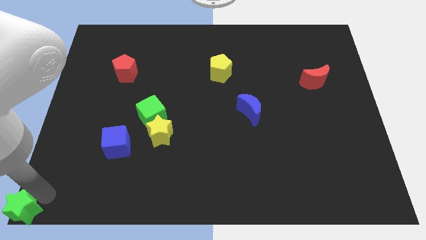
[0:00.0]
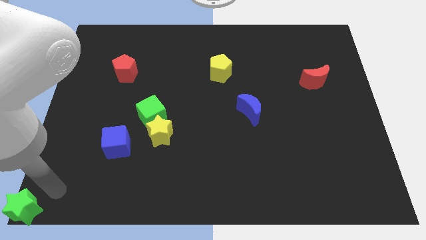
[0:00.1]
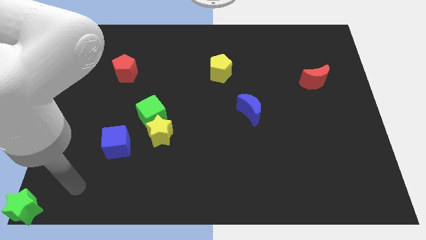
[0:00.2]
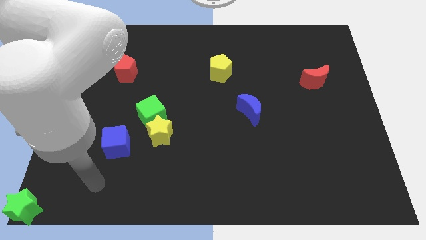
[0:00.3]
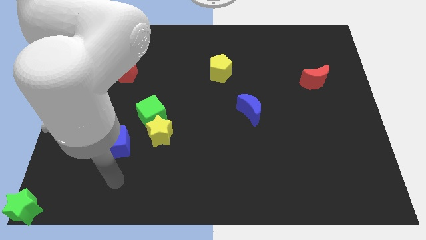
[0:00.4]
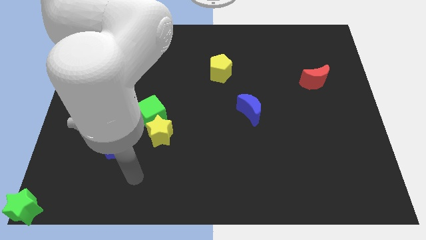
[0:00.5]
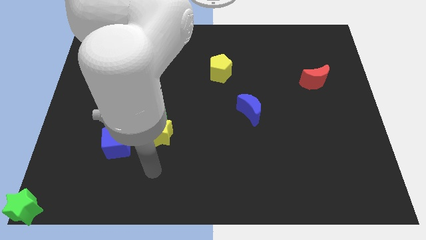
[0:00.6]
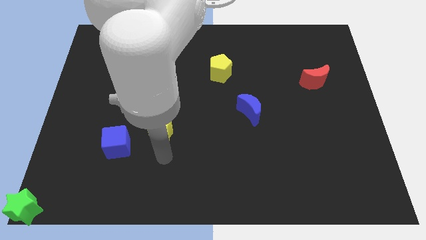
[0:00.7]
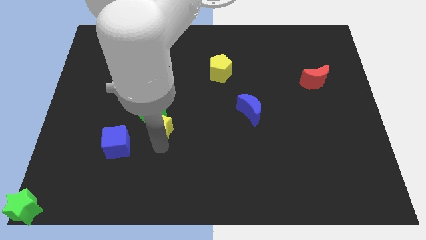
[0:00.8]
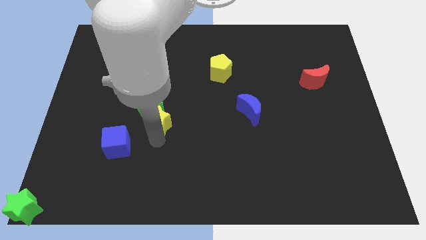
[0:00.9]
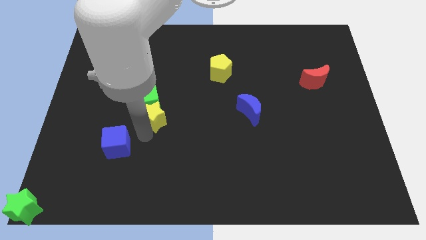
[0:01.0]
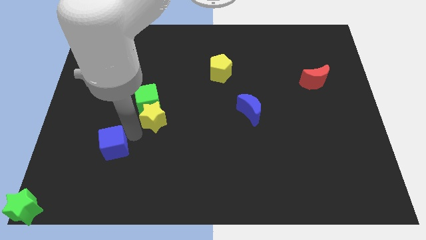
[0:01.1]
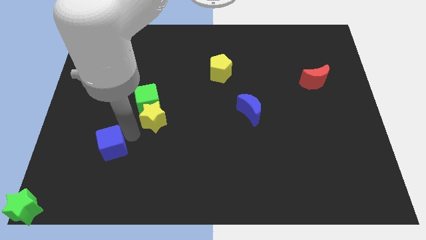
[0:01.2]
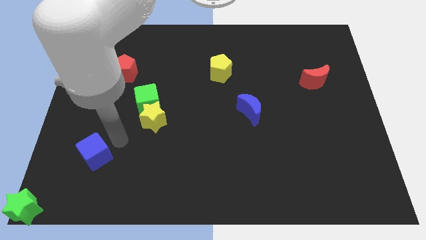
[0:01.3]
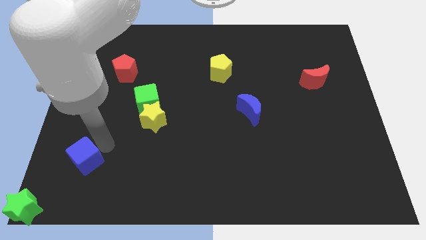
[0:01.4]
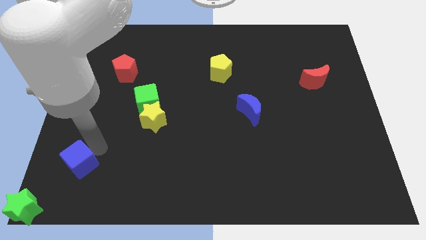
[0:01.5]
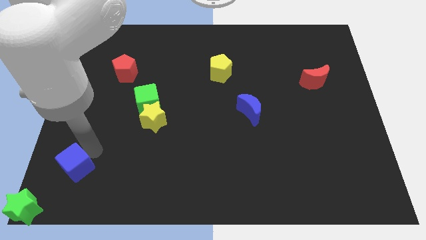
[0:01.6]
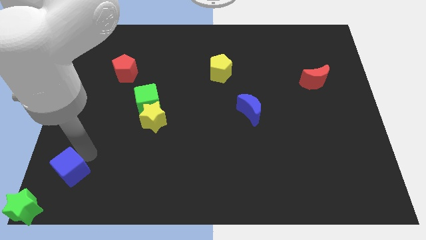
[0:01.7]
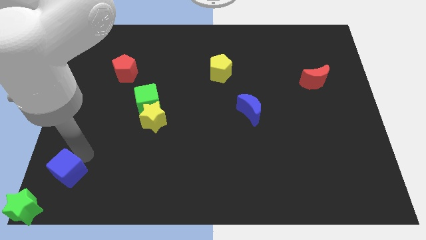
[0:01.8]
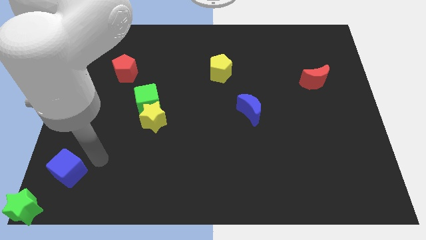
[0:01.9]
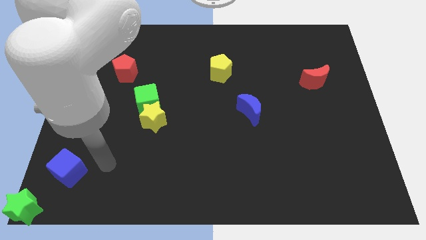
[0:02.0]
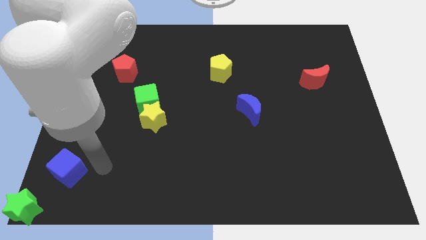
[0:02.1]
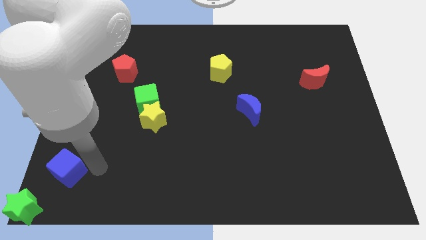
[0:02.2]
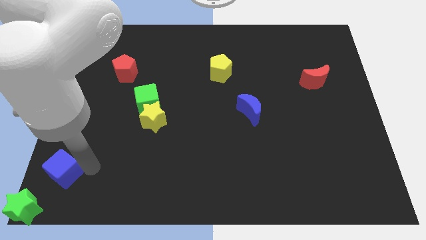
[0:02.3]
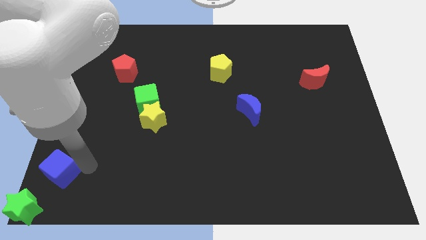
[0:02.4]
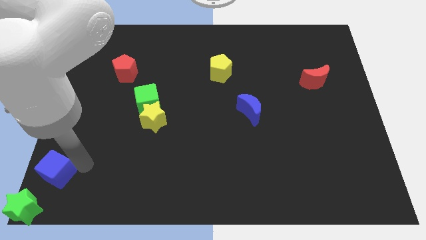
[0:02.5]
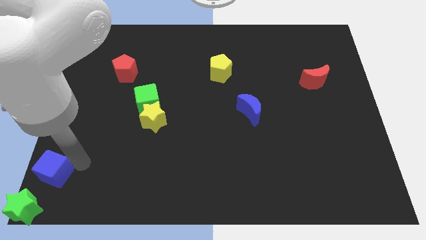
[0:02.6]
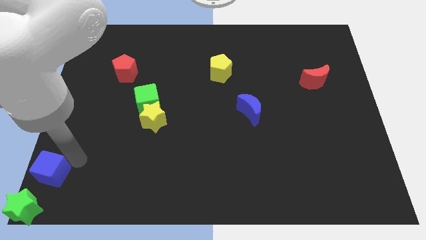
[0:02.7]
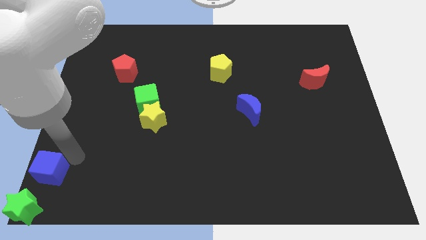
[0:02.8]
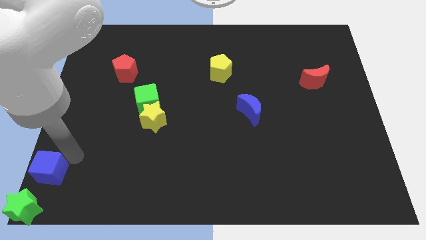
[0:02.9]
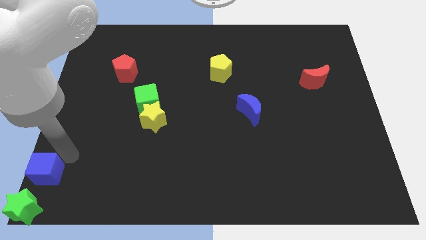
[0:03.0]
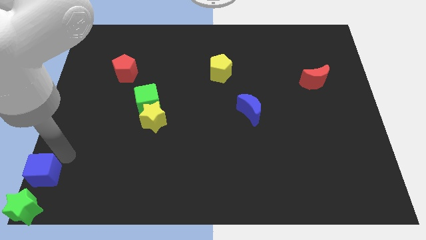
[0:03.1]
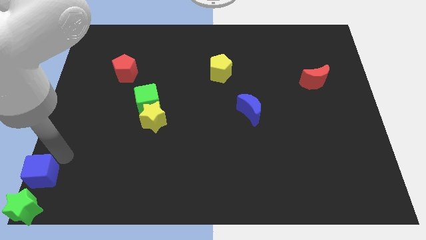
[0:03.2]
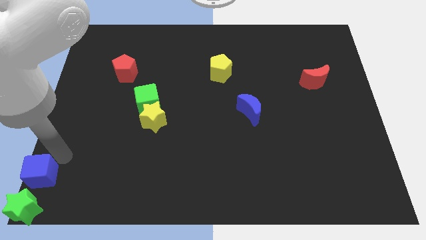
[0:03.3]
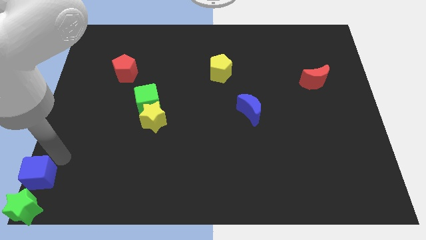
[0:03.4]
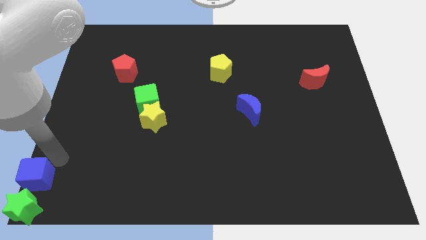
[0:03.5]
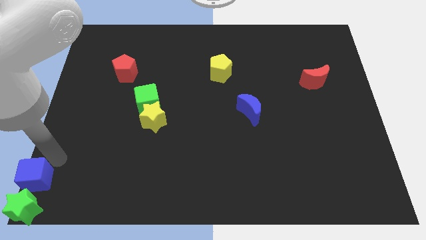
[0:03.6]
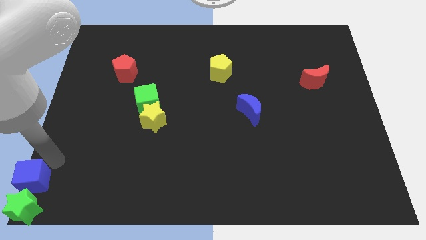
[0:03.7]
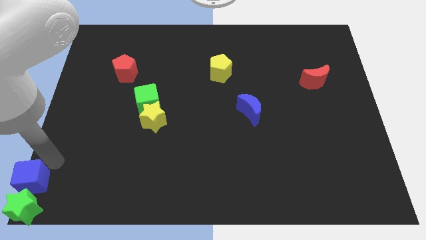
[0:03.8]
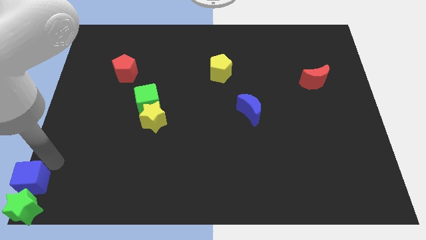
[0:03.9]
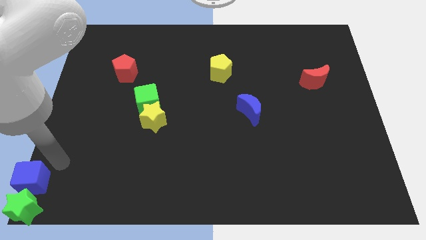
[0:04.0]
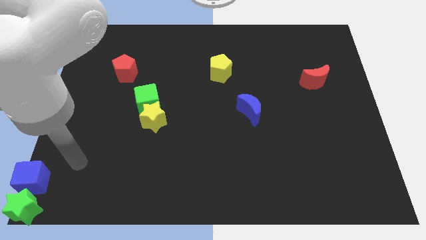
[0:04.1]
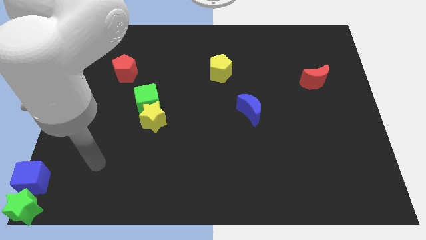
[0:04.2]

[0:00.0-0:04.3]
move blue cube to left bottom of the board

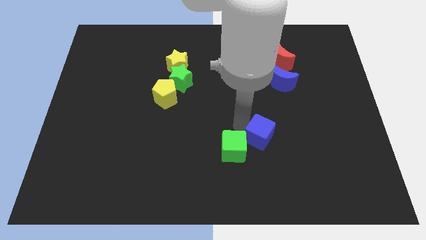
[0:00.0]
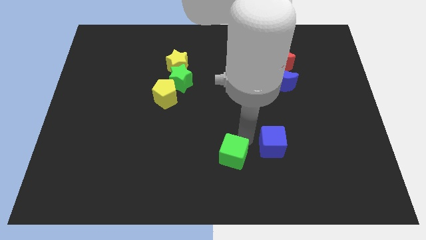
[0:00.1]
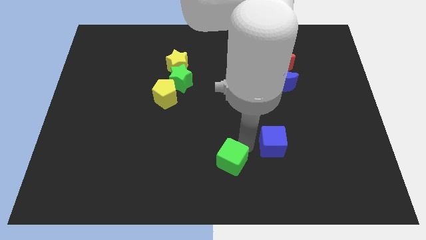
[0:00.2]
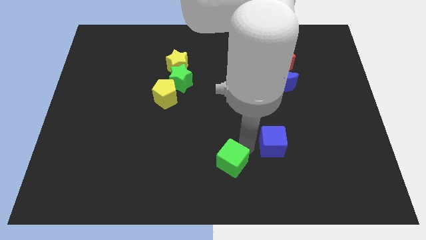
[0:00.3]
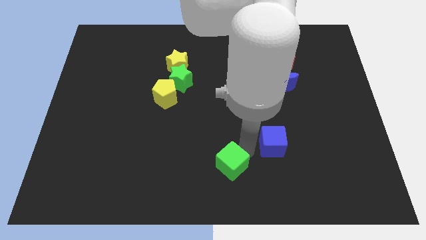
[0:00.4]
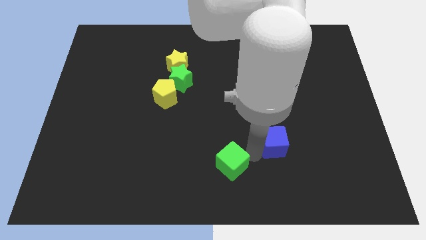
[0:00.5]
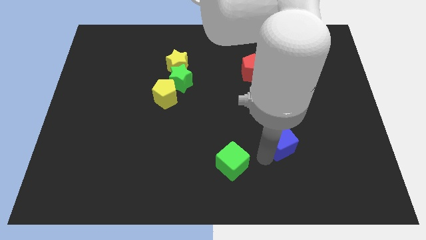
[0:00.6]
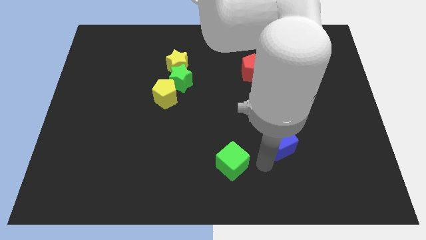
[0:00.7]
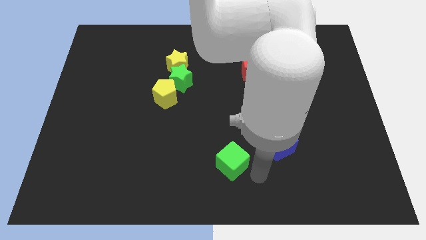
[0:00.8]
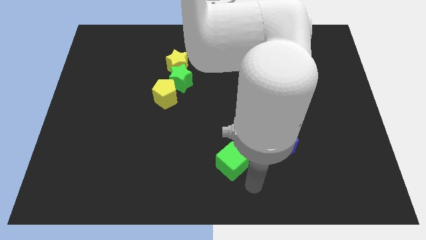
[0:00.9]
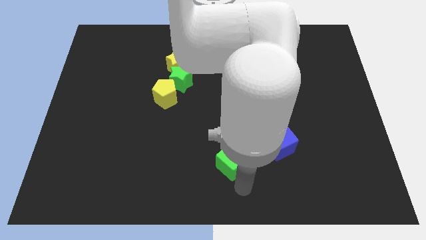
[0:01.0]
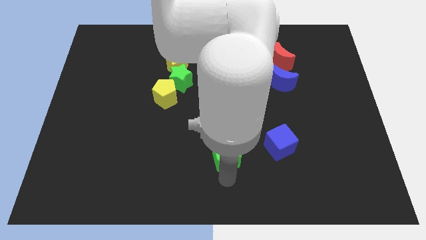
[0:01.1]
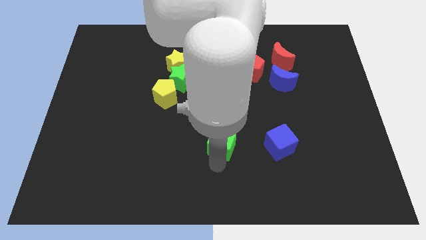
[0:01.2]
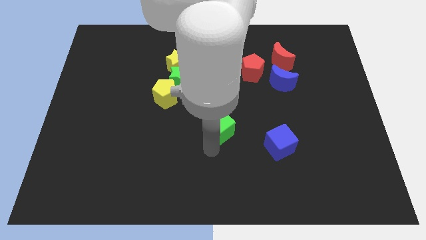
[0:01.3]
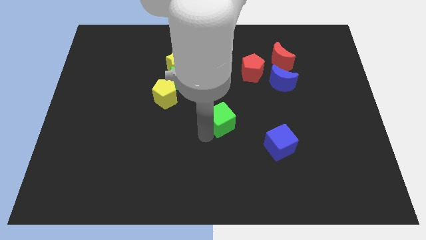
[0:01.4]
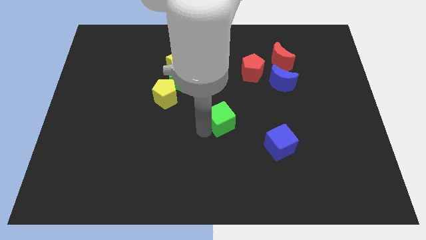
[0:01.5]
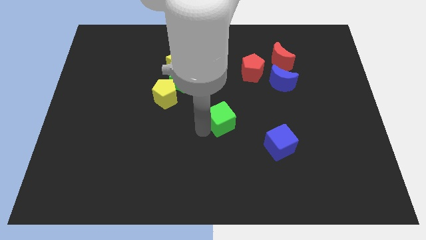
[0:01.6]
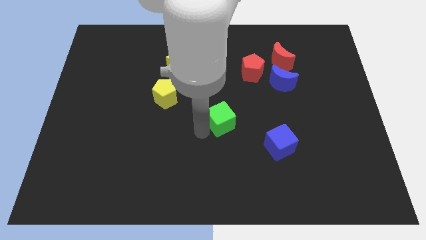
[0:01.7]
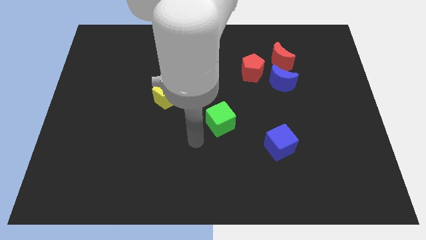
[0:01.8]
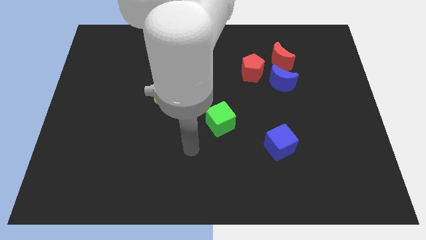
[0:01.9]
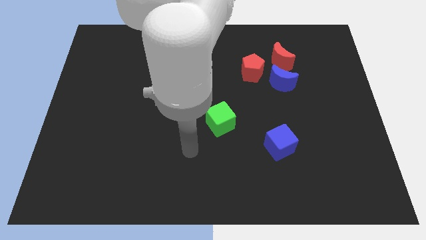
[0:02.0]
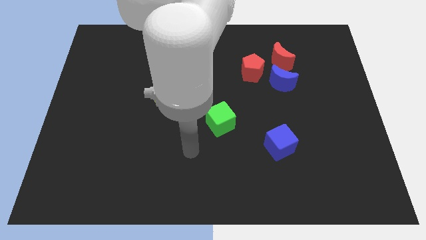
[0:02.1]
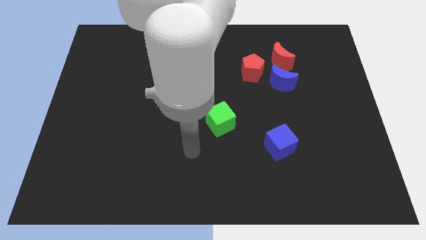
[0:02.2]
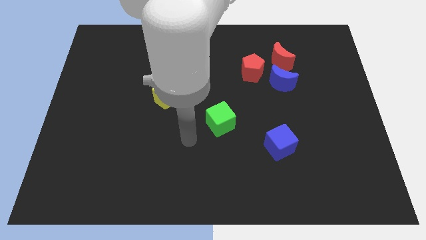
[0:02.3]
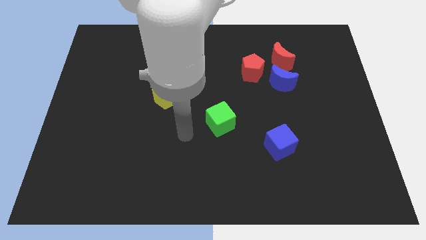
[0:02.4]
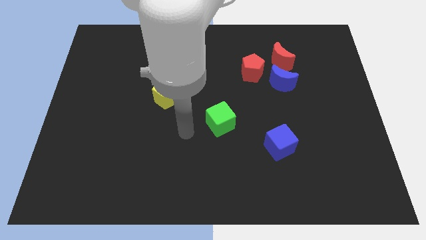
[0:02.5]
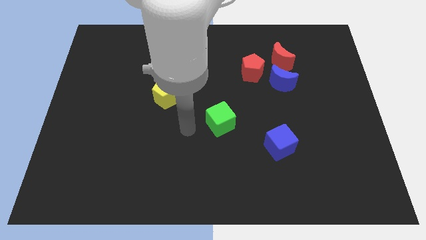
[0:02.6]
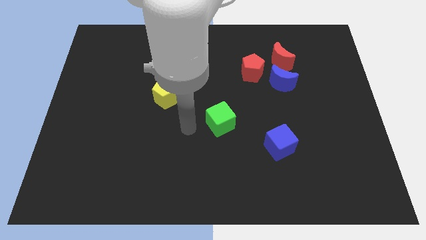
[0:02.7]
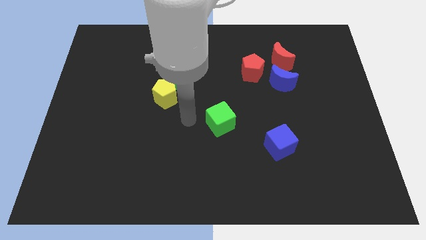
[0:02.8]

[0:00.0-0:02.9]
move the green cube to the center of the board

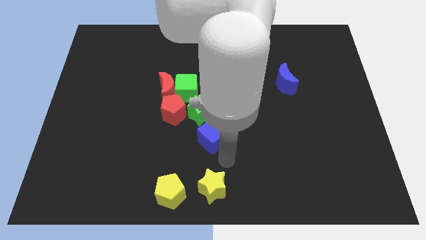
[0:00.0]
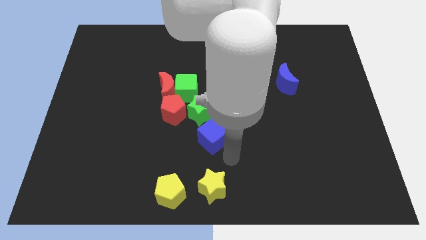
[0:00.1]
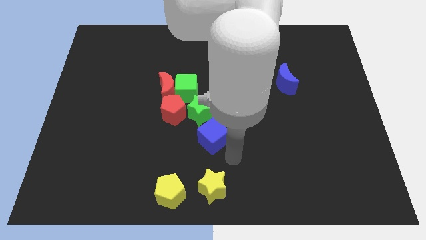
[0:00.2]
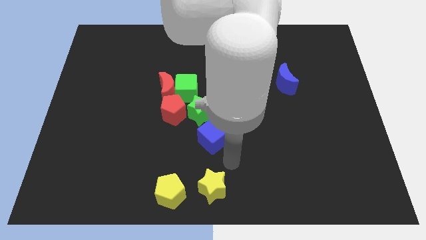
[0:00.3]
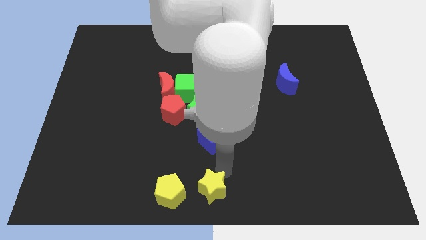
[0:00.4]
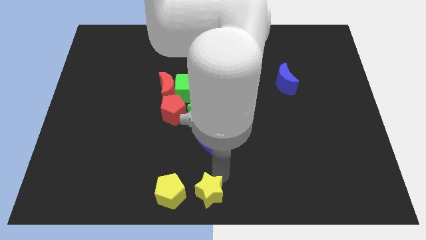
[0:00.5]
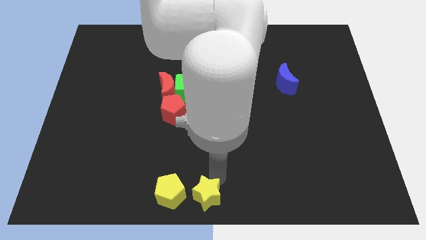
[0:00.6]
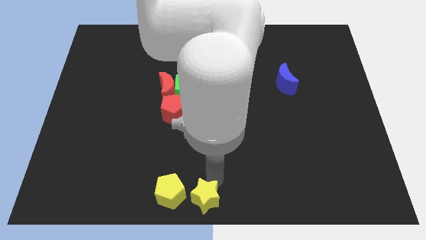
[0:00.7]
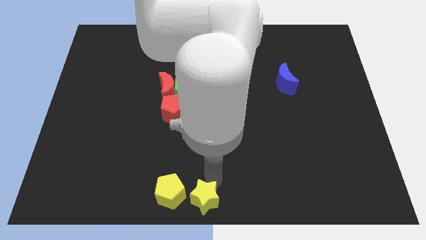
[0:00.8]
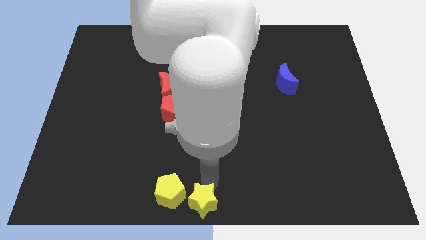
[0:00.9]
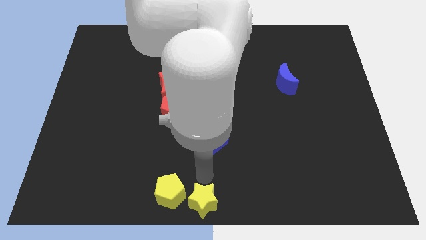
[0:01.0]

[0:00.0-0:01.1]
place the yellow star to the right side of yellow pentagon

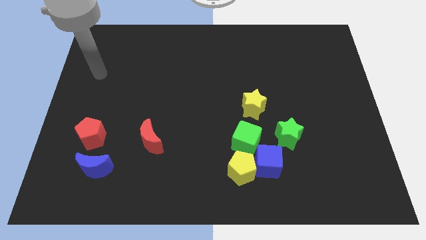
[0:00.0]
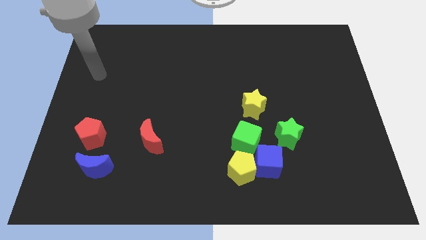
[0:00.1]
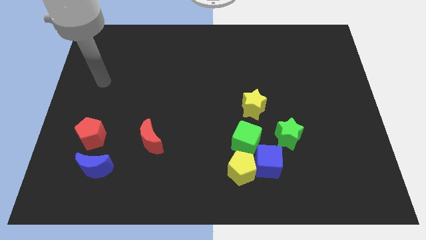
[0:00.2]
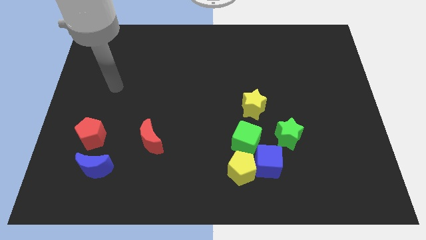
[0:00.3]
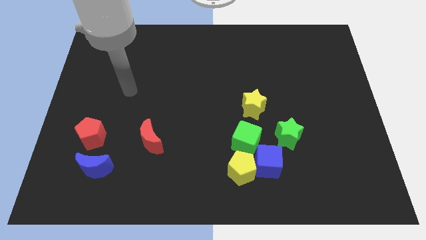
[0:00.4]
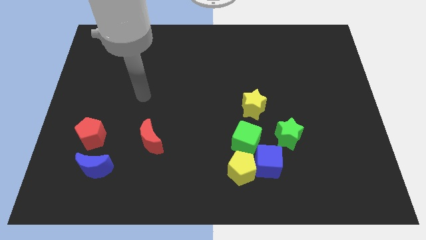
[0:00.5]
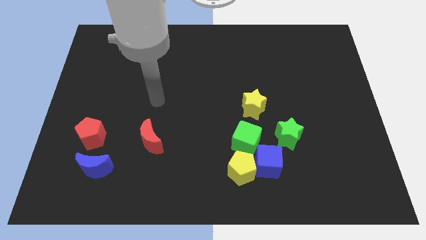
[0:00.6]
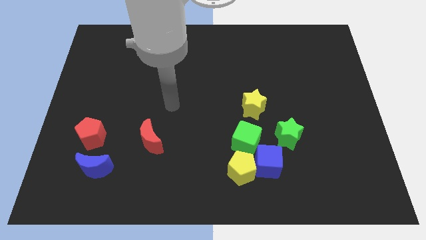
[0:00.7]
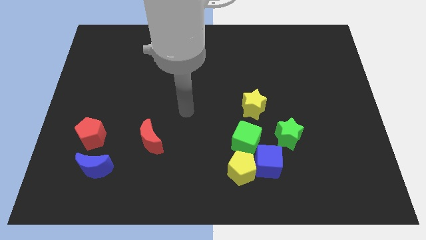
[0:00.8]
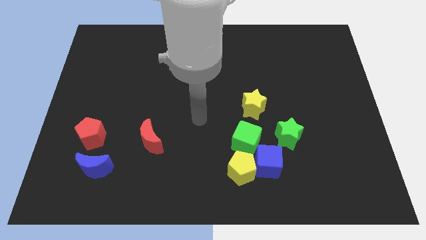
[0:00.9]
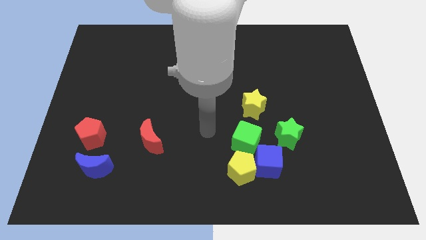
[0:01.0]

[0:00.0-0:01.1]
slide your arm to the left of green cube
